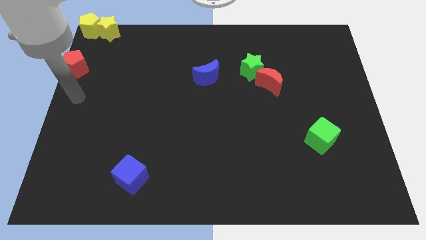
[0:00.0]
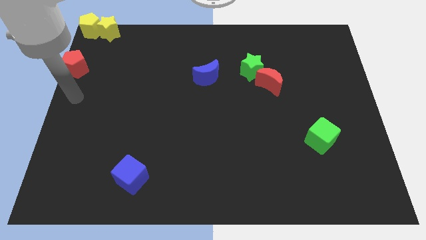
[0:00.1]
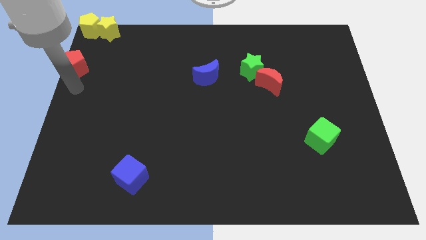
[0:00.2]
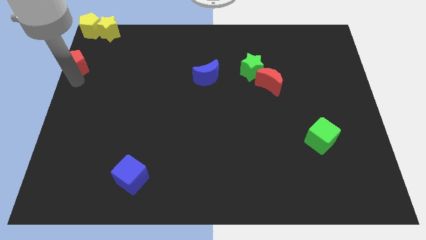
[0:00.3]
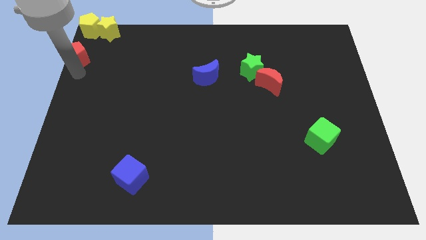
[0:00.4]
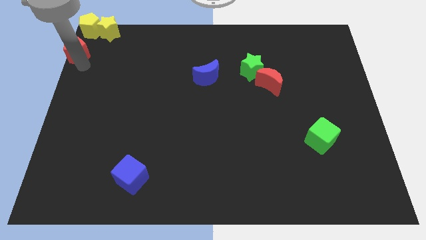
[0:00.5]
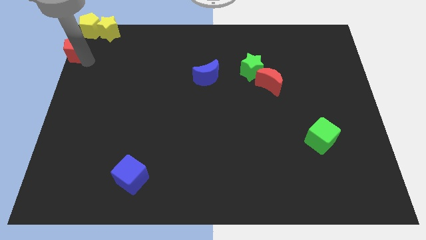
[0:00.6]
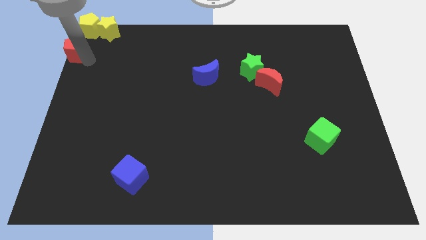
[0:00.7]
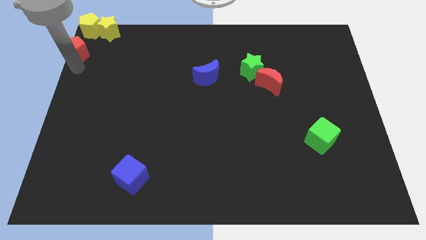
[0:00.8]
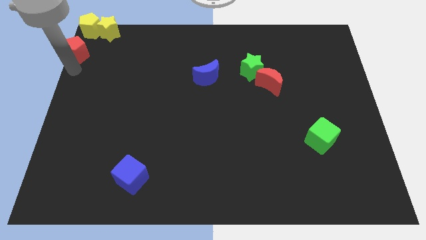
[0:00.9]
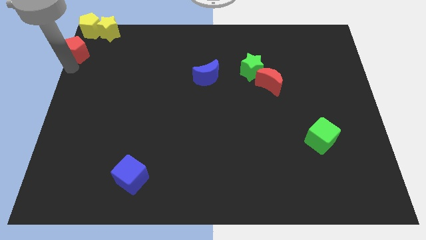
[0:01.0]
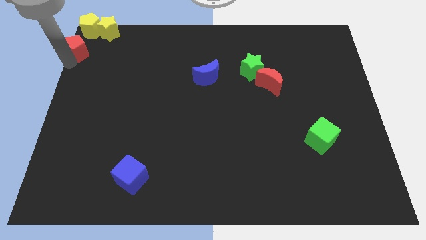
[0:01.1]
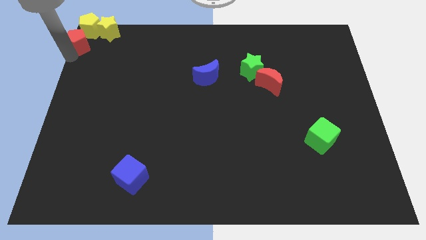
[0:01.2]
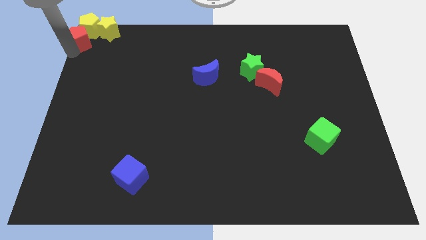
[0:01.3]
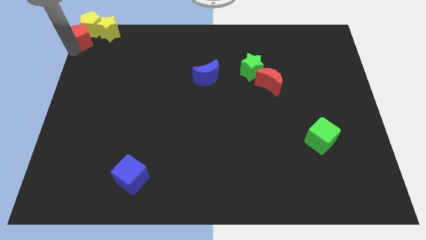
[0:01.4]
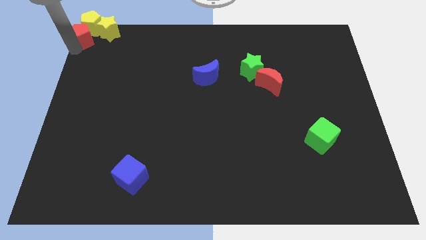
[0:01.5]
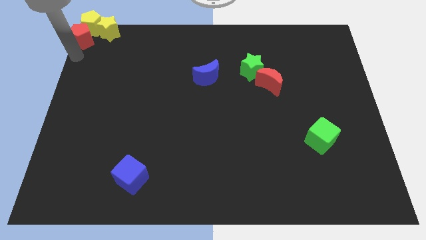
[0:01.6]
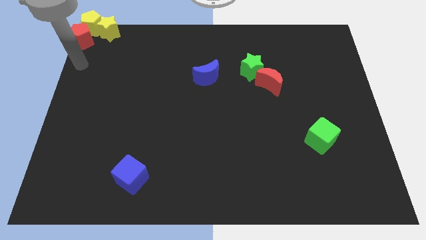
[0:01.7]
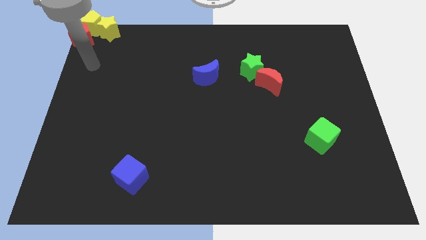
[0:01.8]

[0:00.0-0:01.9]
place red pentagon to the left of yellow pentagon

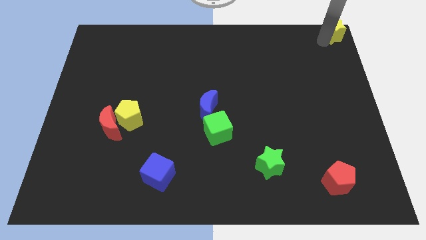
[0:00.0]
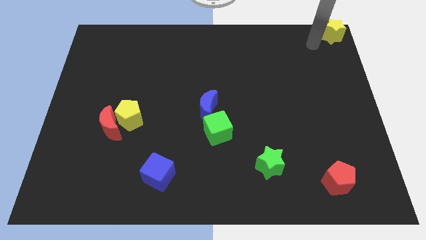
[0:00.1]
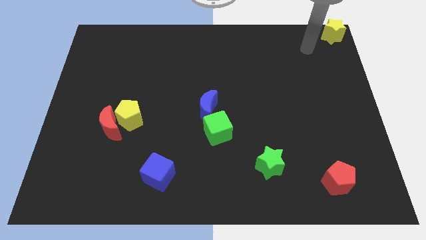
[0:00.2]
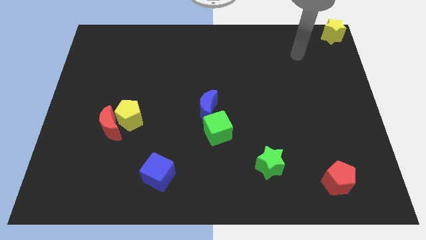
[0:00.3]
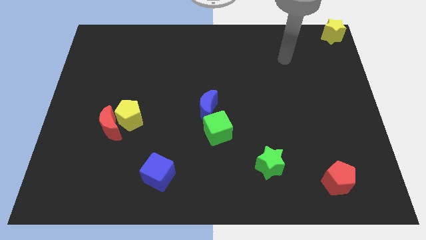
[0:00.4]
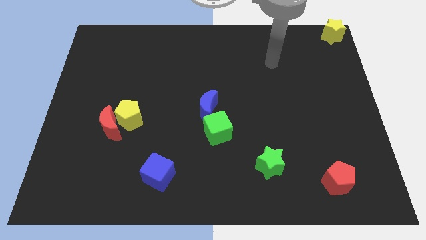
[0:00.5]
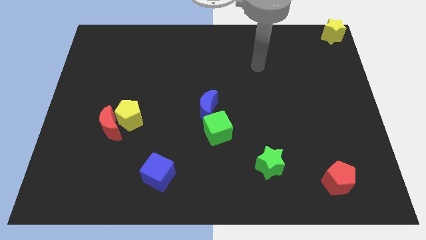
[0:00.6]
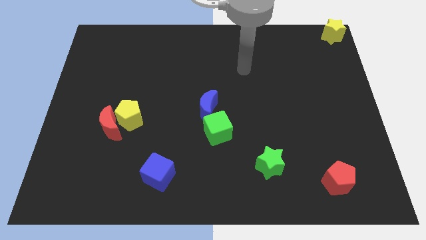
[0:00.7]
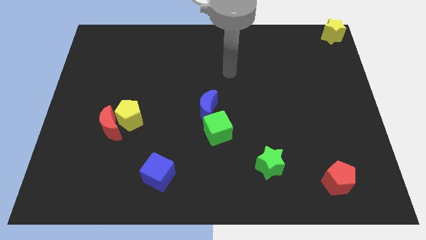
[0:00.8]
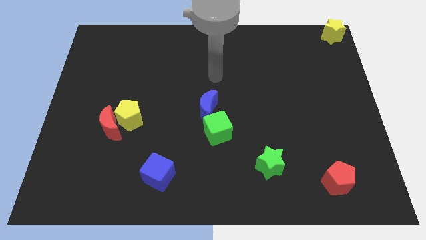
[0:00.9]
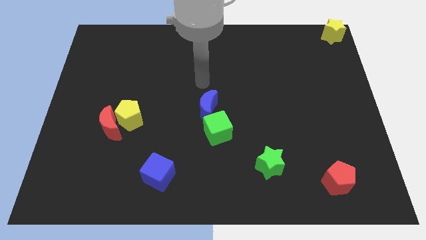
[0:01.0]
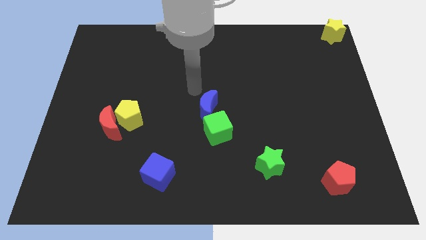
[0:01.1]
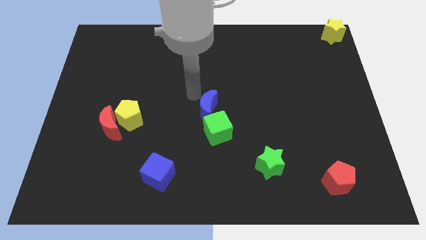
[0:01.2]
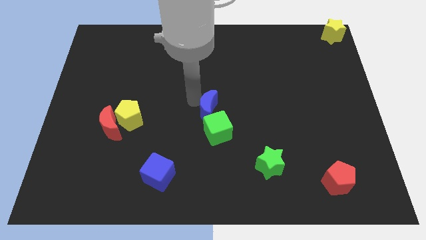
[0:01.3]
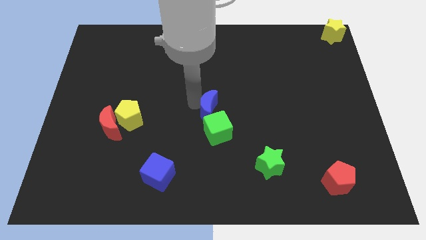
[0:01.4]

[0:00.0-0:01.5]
move your hand towards the blue crescent

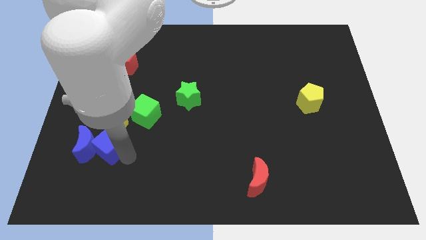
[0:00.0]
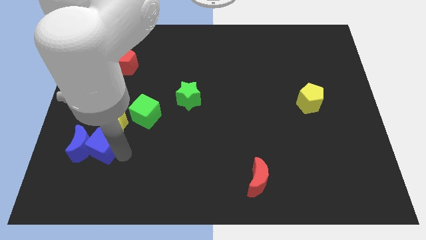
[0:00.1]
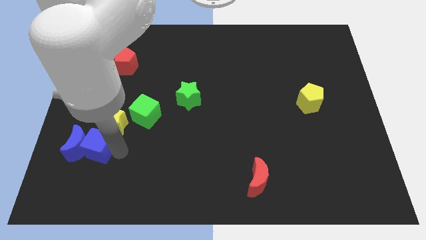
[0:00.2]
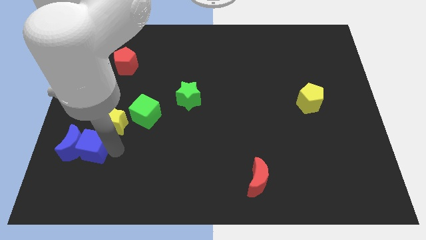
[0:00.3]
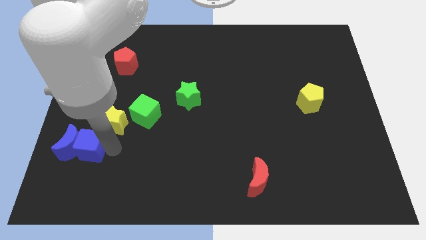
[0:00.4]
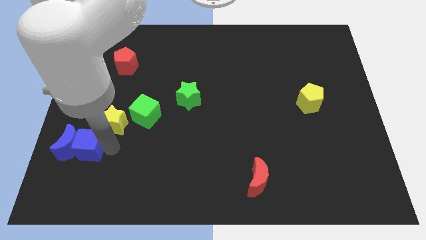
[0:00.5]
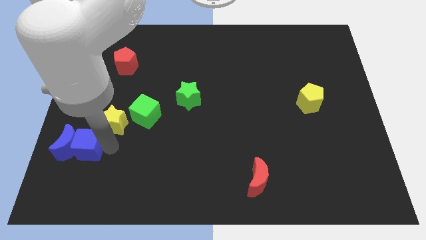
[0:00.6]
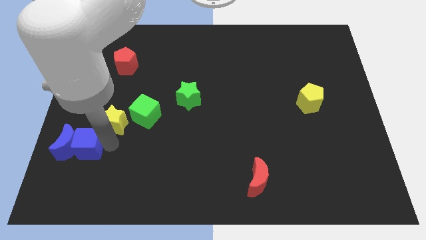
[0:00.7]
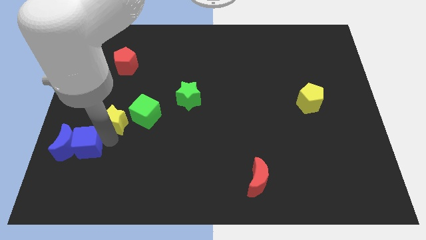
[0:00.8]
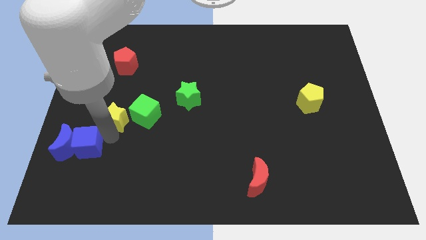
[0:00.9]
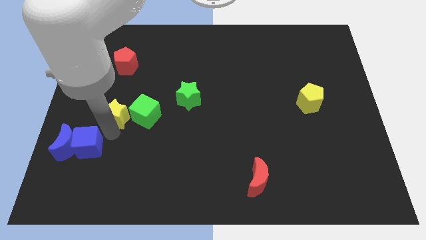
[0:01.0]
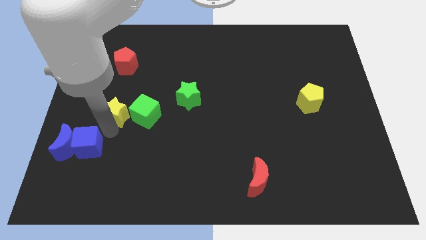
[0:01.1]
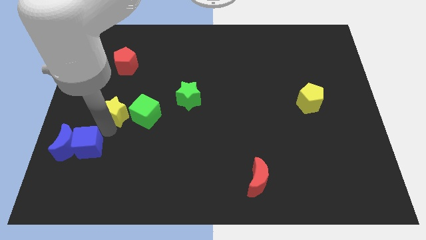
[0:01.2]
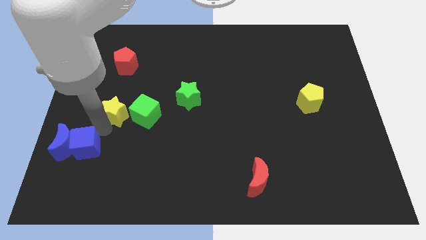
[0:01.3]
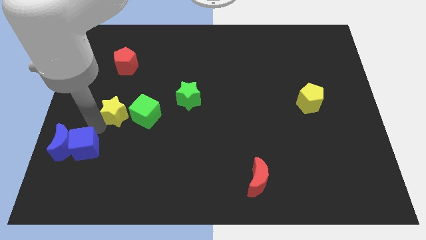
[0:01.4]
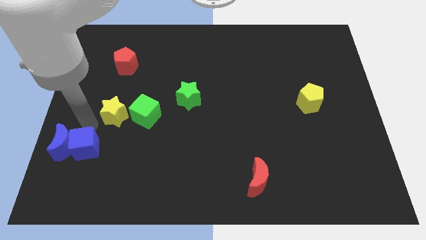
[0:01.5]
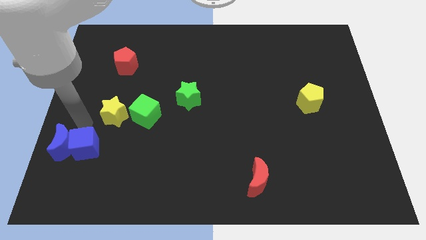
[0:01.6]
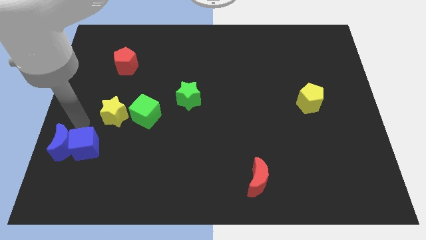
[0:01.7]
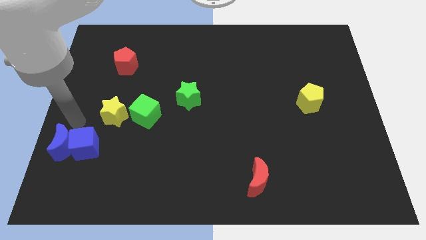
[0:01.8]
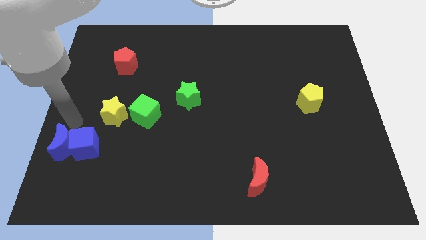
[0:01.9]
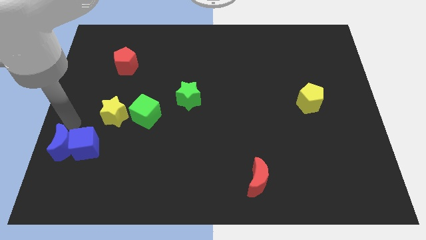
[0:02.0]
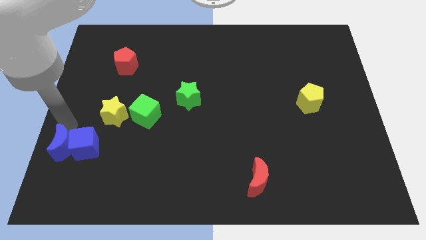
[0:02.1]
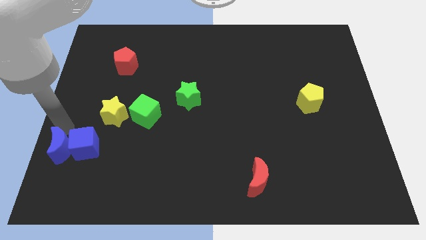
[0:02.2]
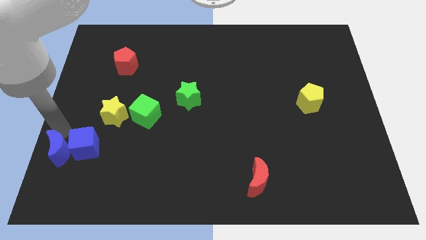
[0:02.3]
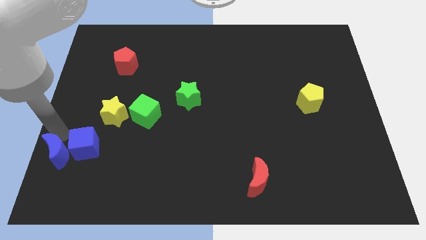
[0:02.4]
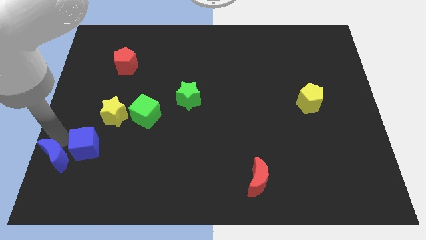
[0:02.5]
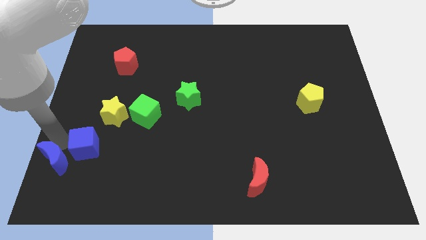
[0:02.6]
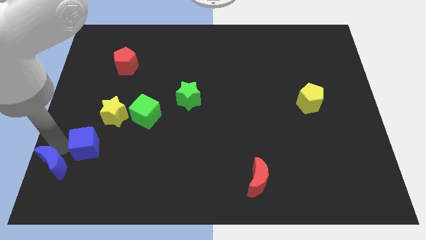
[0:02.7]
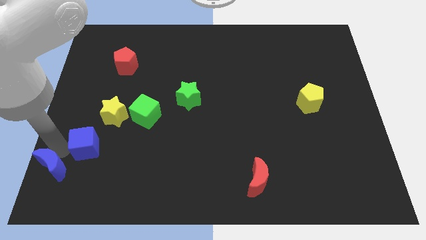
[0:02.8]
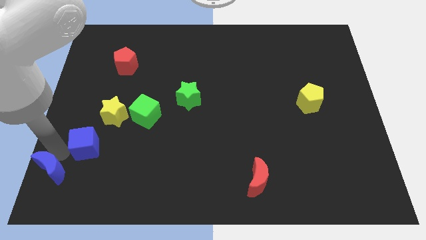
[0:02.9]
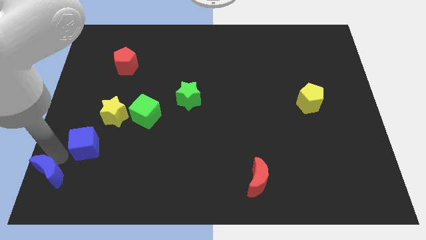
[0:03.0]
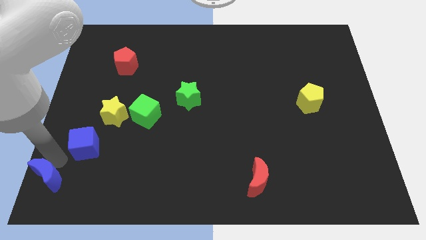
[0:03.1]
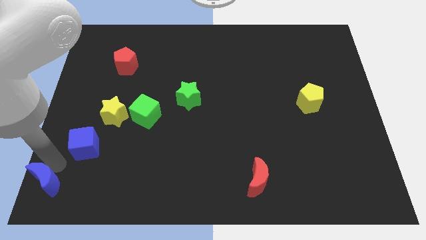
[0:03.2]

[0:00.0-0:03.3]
separate the blue moon from the blue cube

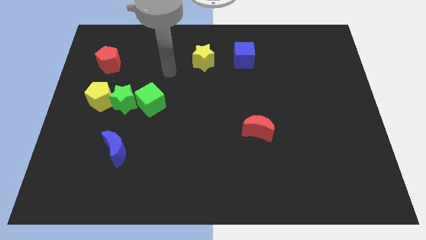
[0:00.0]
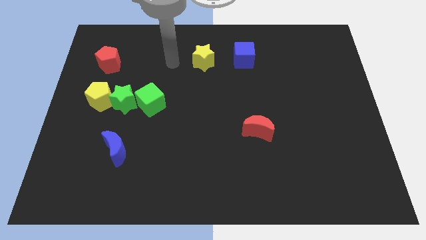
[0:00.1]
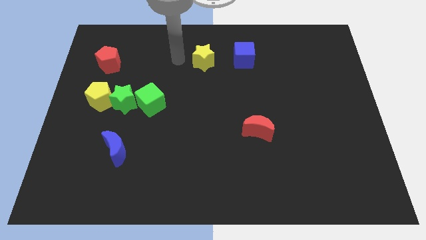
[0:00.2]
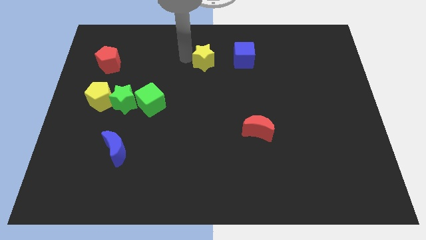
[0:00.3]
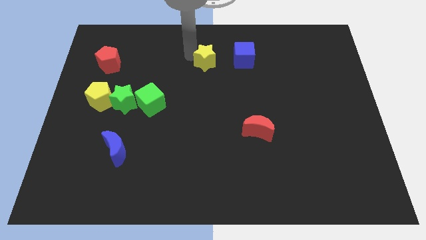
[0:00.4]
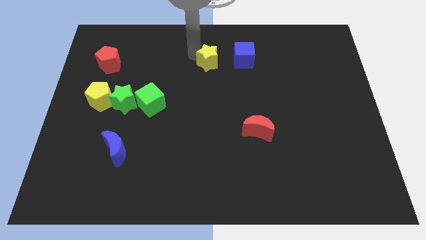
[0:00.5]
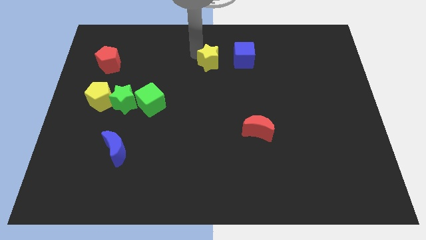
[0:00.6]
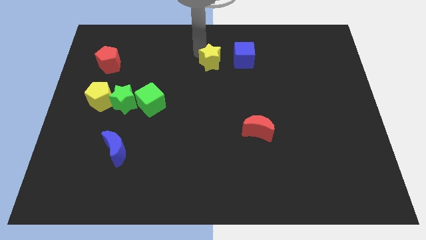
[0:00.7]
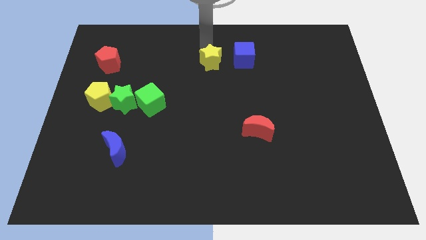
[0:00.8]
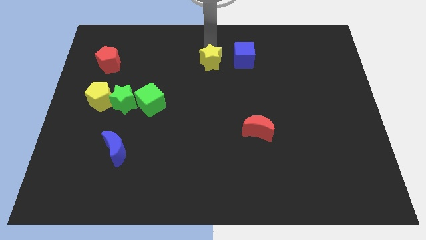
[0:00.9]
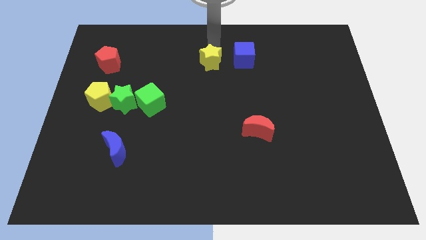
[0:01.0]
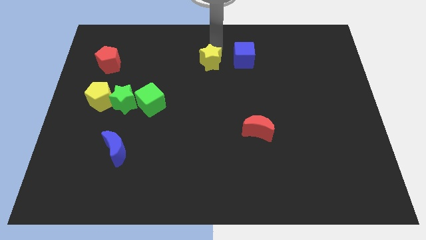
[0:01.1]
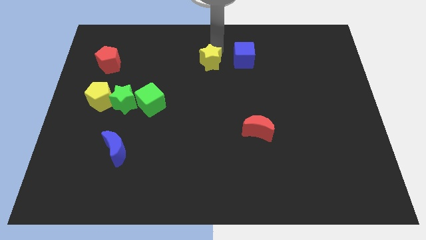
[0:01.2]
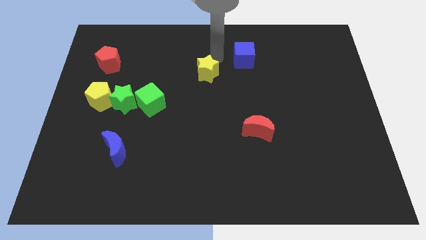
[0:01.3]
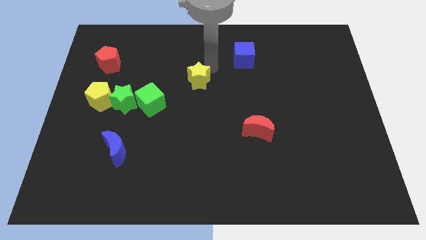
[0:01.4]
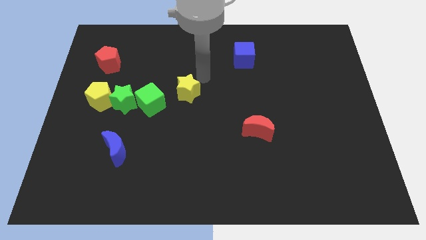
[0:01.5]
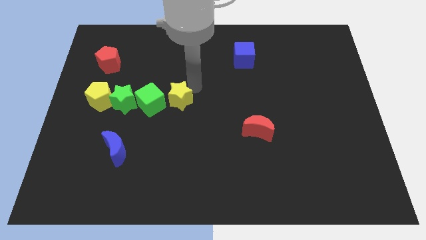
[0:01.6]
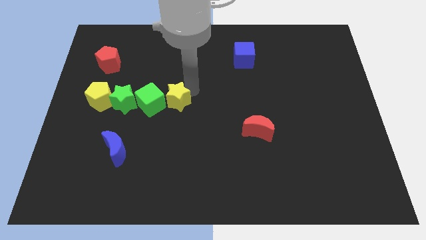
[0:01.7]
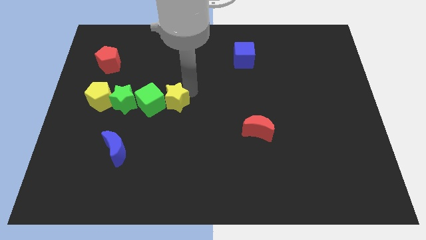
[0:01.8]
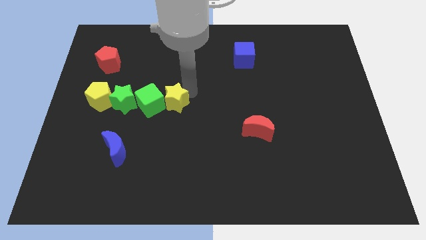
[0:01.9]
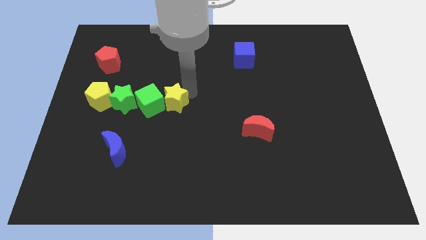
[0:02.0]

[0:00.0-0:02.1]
place yellow star to the right of green cube

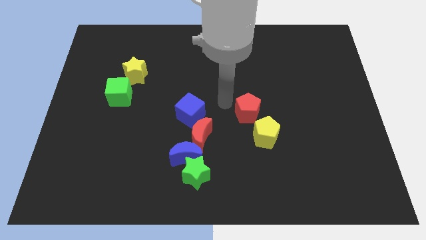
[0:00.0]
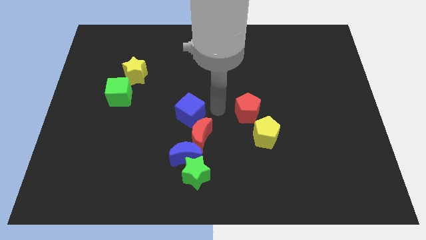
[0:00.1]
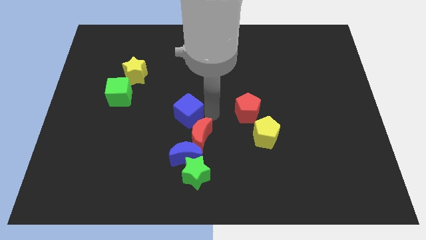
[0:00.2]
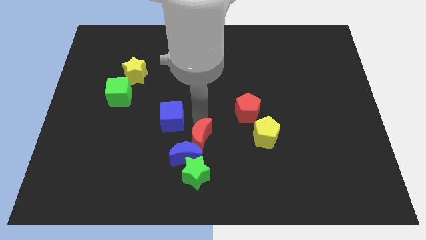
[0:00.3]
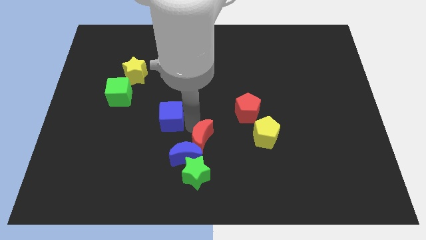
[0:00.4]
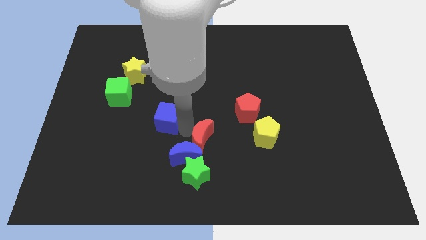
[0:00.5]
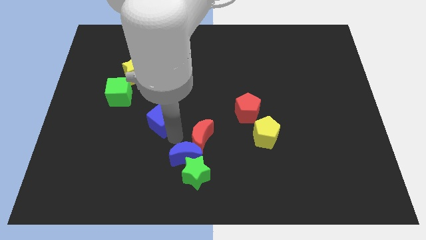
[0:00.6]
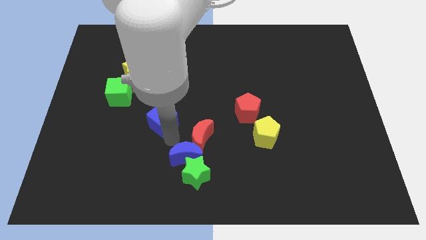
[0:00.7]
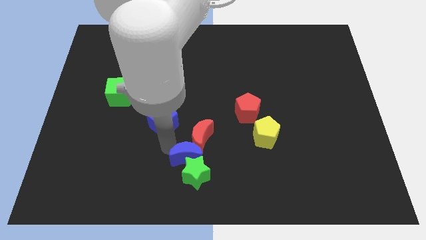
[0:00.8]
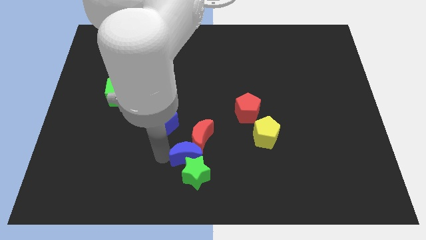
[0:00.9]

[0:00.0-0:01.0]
separate the red crescent and the blue cube
